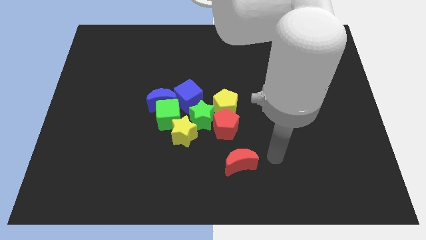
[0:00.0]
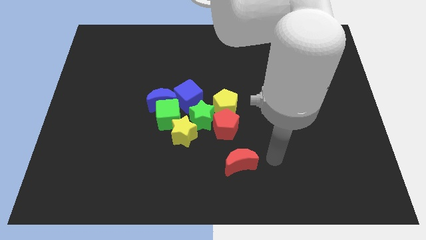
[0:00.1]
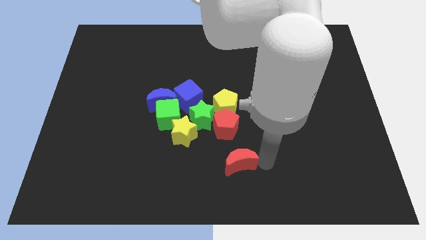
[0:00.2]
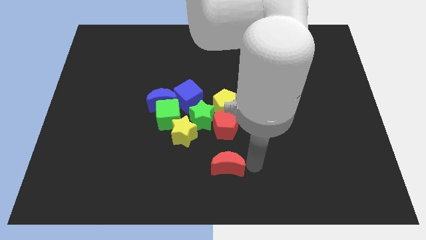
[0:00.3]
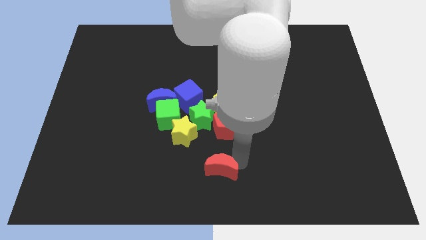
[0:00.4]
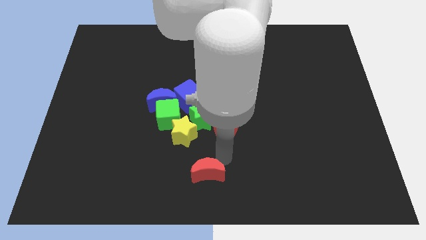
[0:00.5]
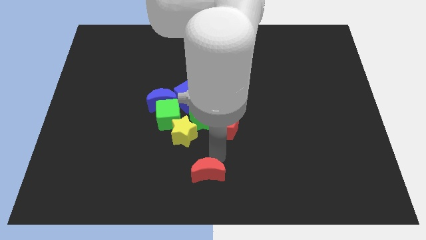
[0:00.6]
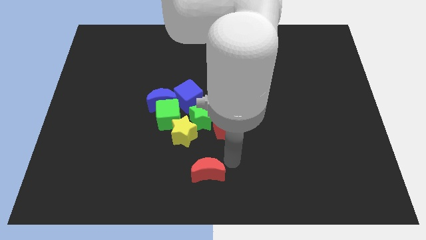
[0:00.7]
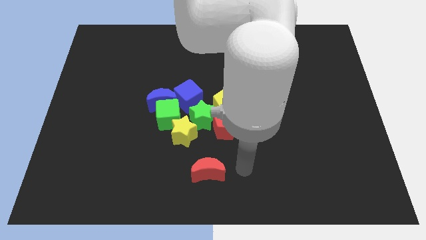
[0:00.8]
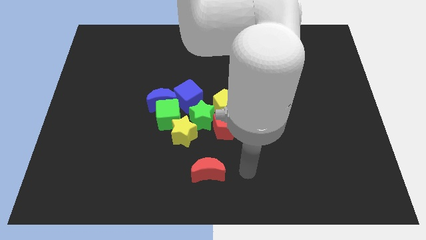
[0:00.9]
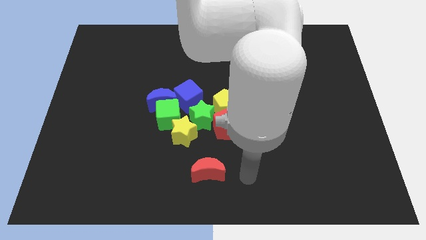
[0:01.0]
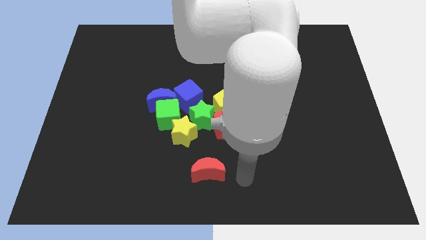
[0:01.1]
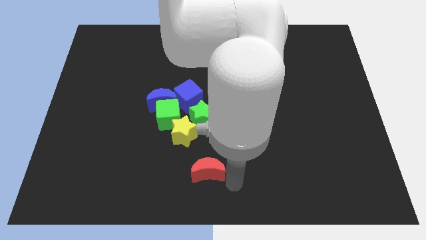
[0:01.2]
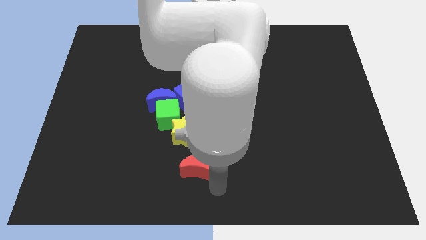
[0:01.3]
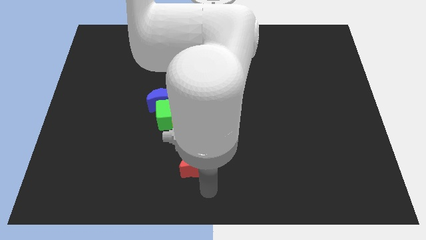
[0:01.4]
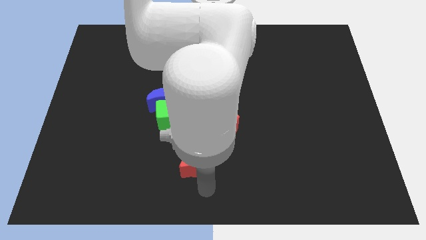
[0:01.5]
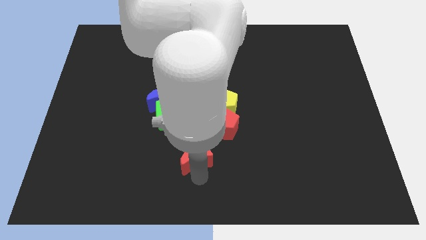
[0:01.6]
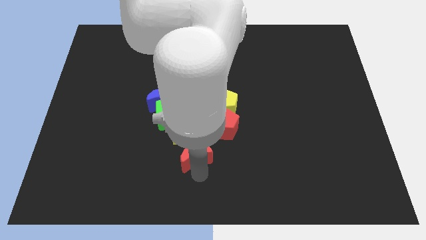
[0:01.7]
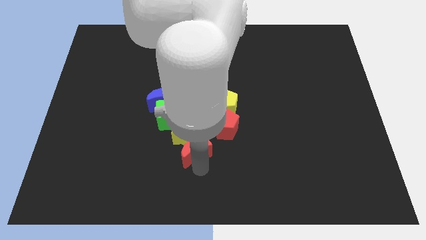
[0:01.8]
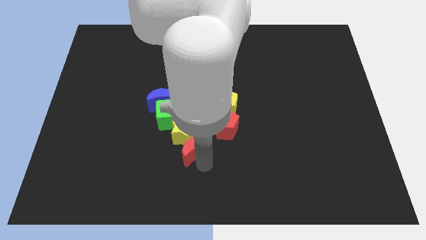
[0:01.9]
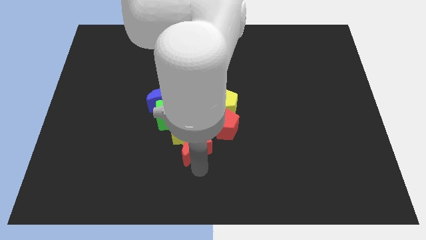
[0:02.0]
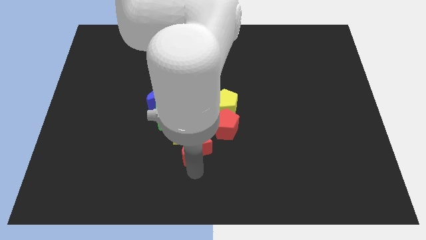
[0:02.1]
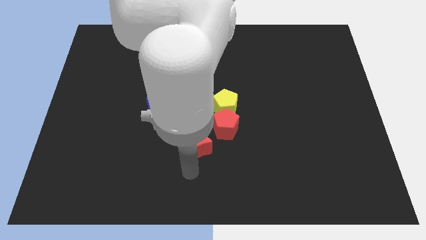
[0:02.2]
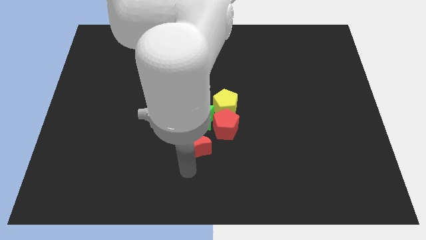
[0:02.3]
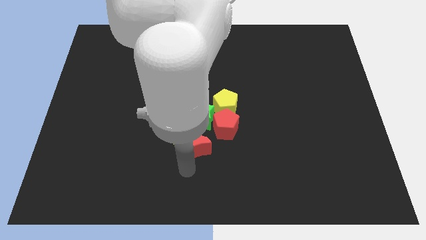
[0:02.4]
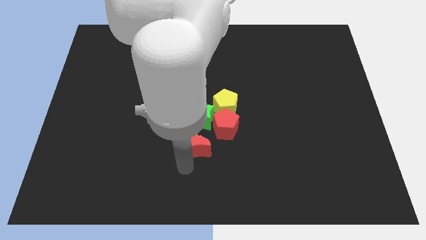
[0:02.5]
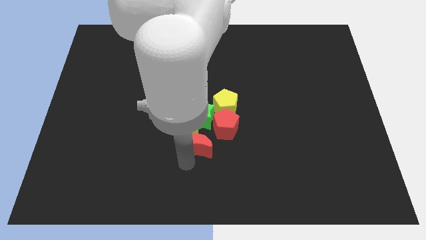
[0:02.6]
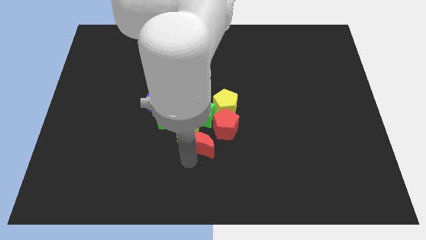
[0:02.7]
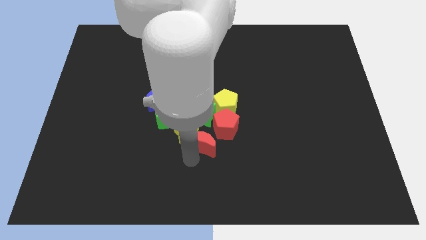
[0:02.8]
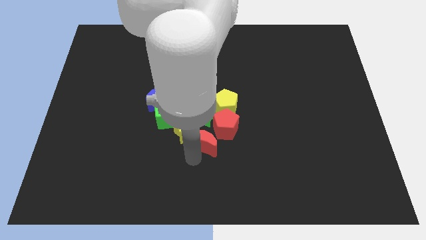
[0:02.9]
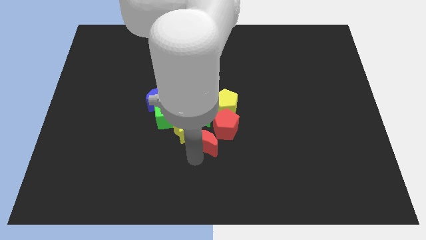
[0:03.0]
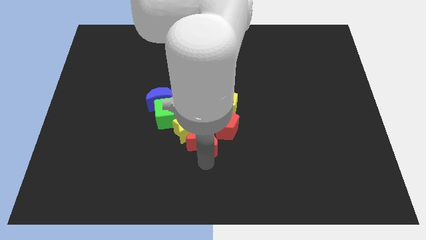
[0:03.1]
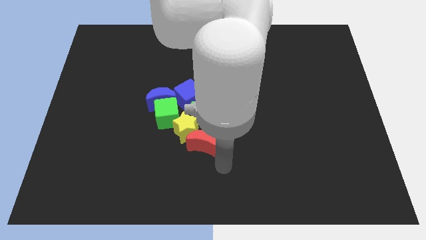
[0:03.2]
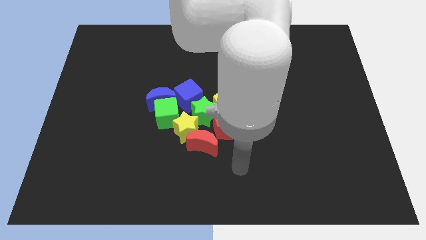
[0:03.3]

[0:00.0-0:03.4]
push the red moon towards the group of blocks

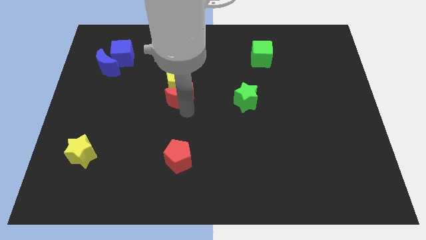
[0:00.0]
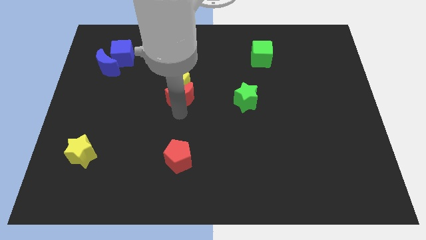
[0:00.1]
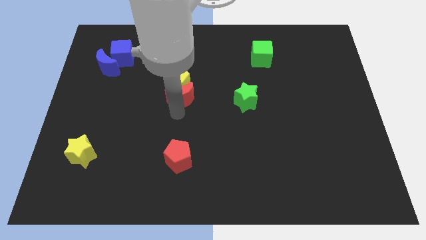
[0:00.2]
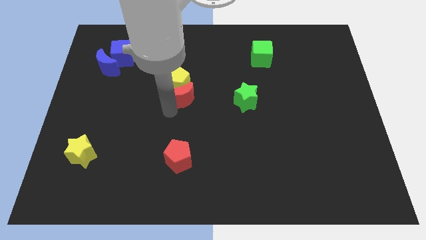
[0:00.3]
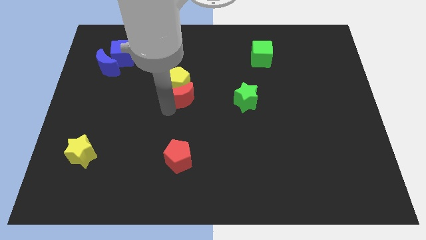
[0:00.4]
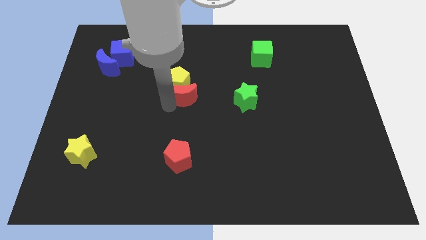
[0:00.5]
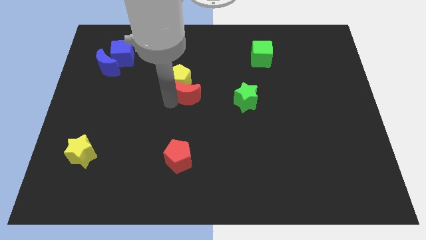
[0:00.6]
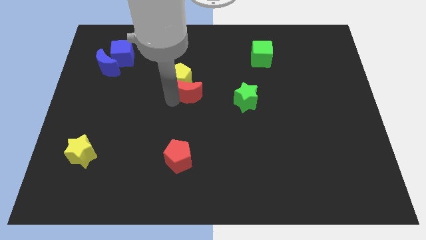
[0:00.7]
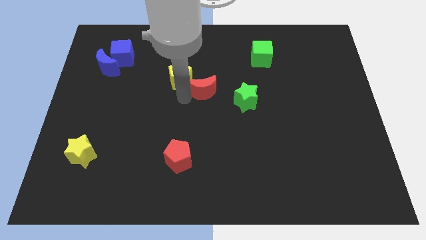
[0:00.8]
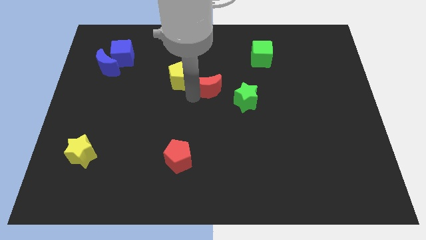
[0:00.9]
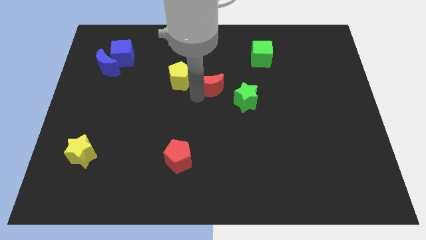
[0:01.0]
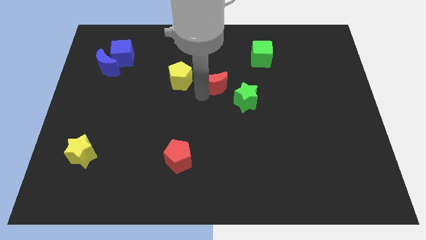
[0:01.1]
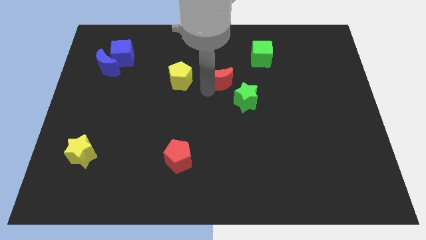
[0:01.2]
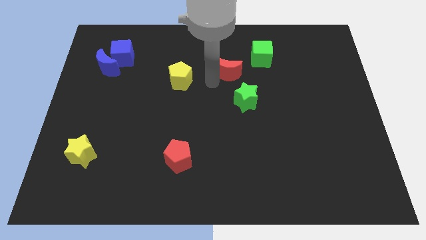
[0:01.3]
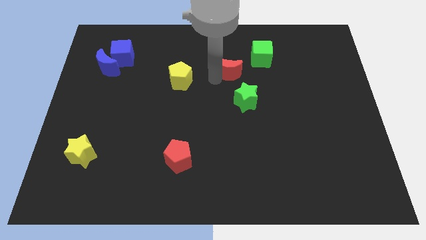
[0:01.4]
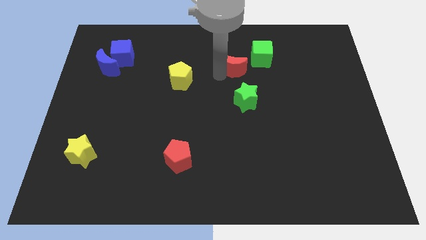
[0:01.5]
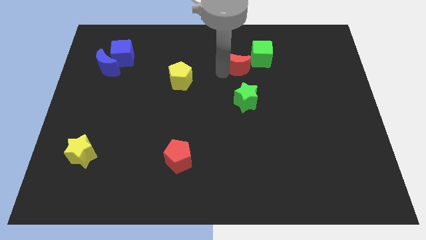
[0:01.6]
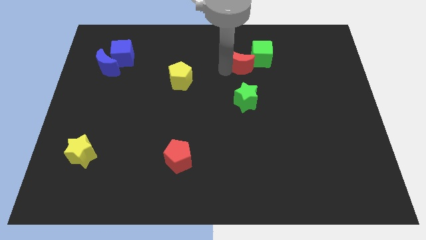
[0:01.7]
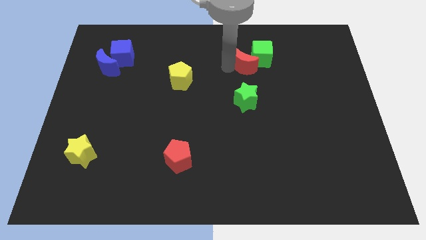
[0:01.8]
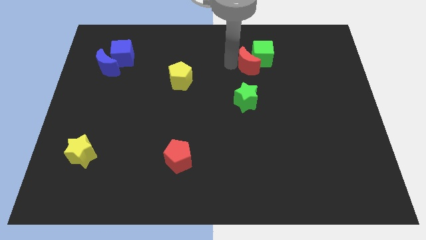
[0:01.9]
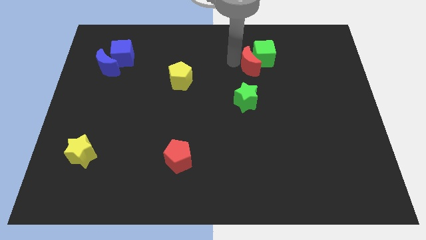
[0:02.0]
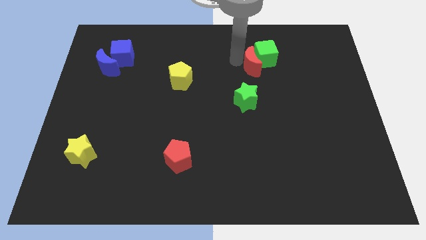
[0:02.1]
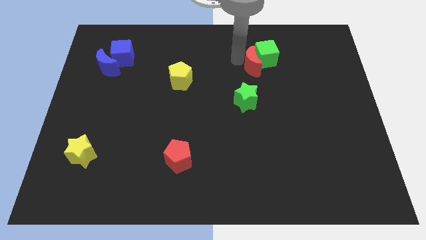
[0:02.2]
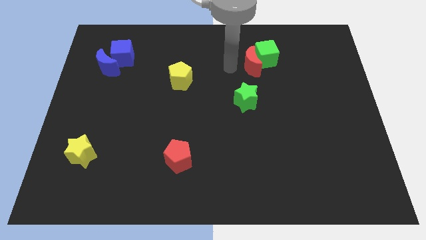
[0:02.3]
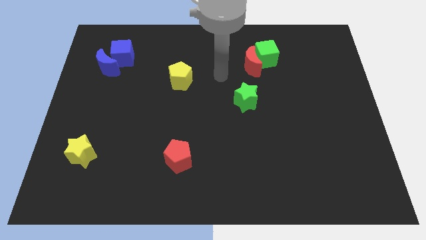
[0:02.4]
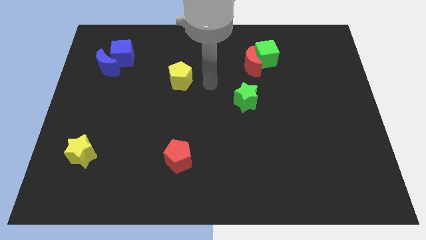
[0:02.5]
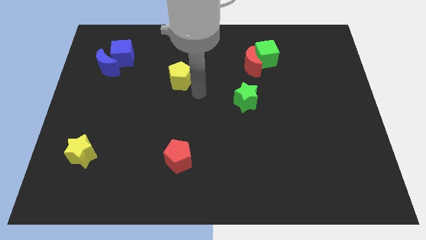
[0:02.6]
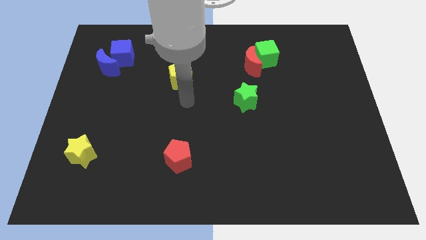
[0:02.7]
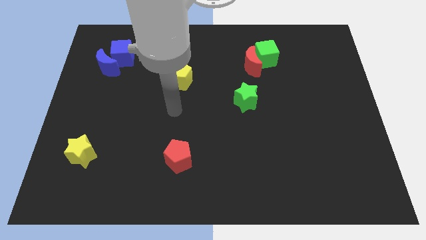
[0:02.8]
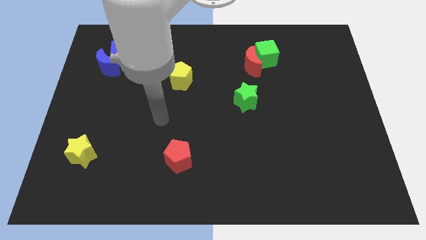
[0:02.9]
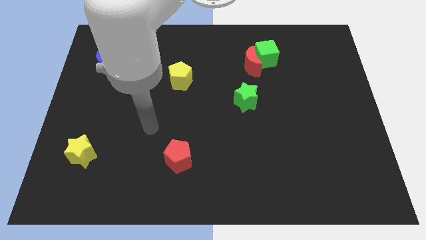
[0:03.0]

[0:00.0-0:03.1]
move red moon close to the green cube

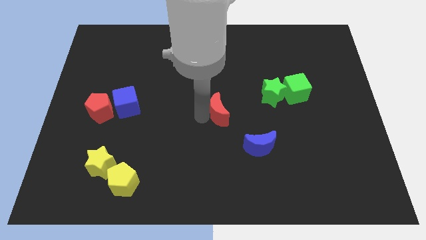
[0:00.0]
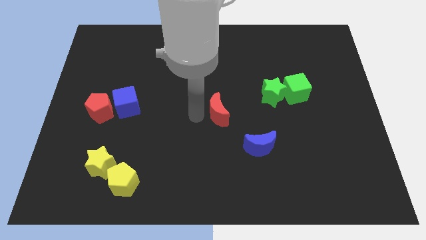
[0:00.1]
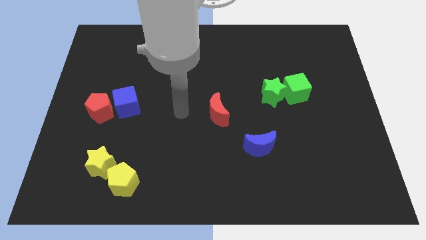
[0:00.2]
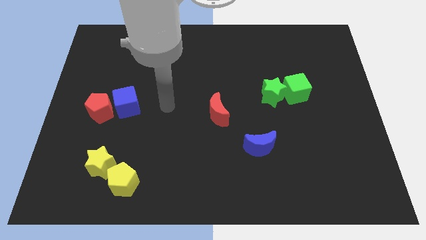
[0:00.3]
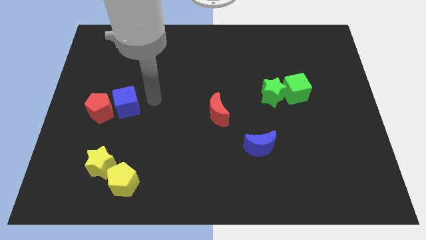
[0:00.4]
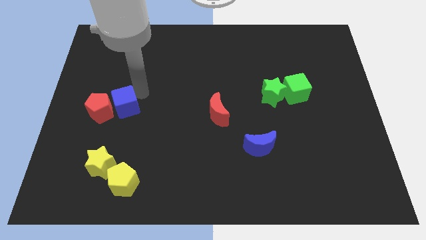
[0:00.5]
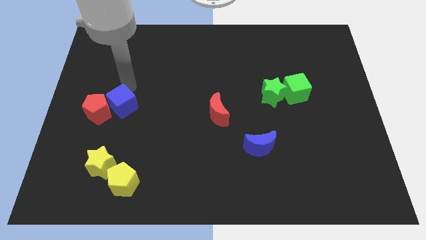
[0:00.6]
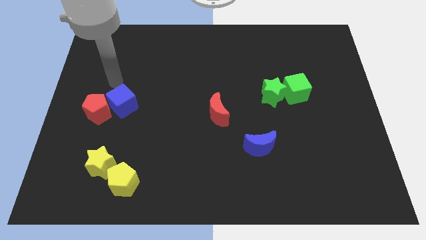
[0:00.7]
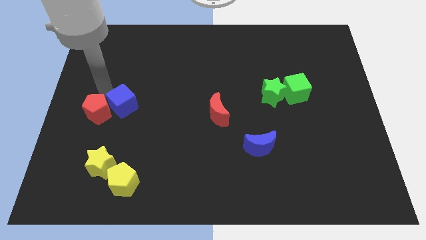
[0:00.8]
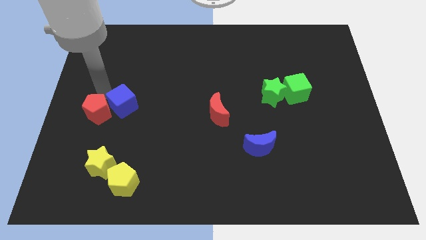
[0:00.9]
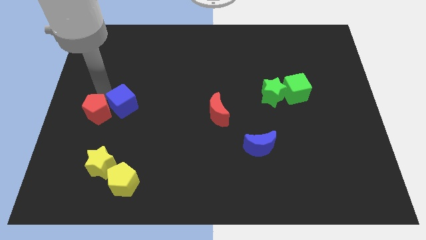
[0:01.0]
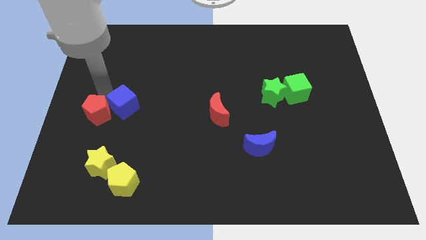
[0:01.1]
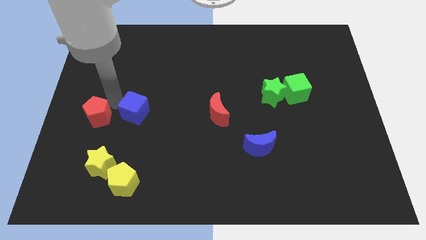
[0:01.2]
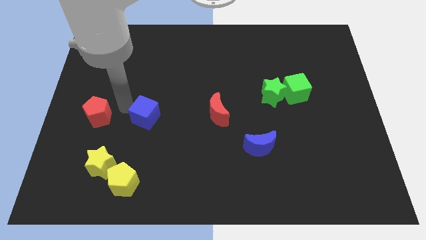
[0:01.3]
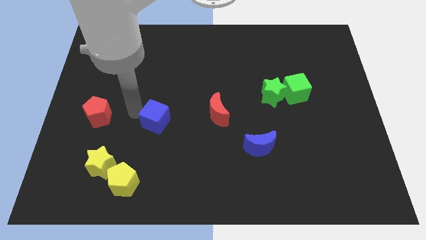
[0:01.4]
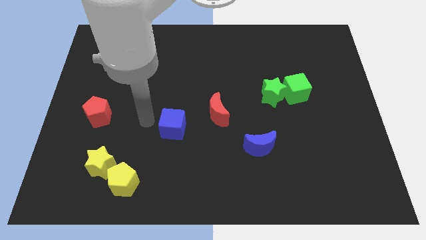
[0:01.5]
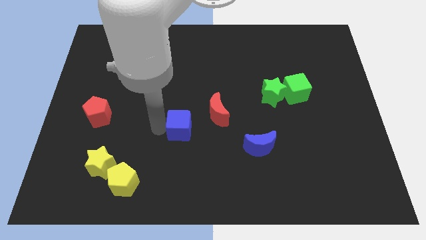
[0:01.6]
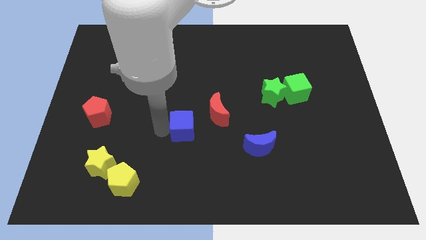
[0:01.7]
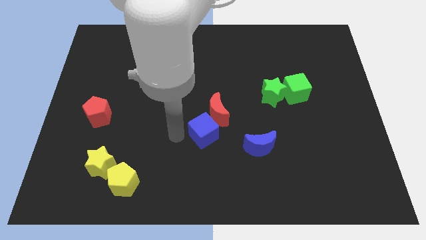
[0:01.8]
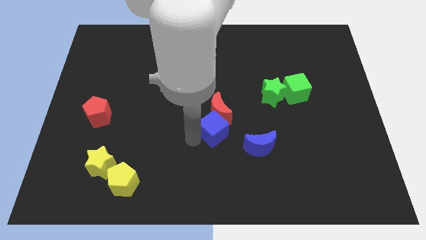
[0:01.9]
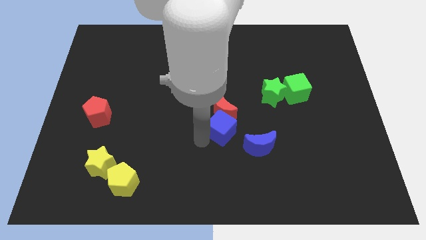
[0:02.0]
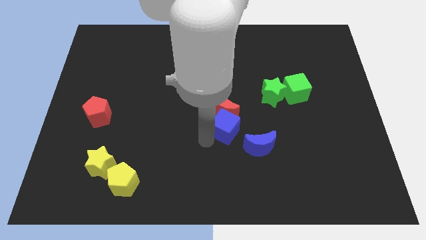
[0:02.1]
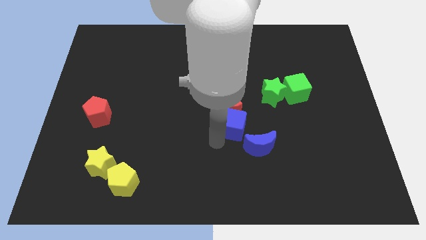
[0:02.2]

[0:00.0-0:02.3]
push the blue cube into the bottom of the red crescent

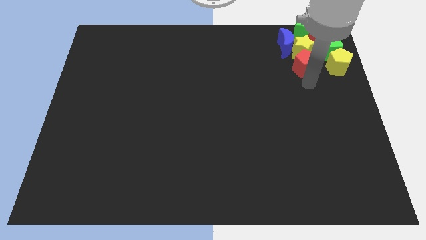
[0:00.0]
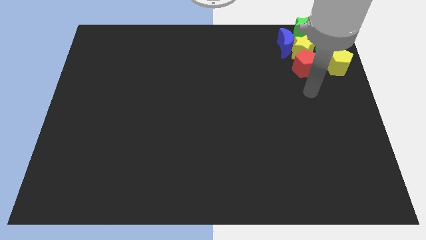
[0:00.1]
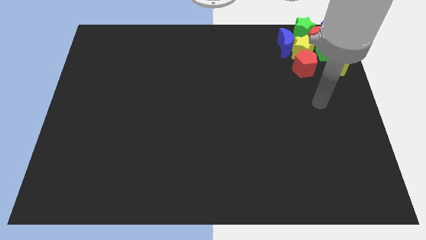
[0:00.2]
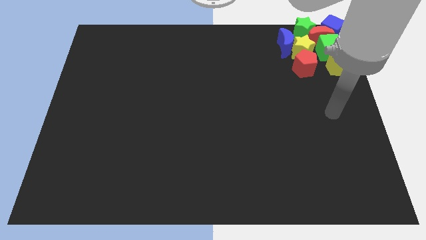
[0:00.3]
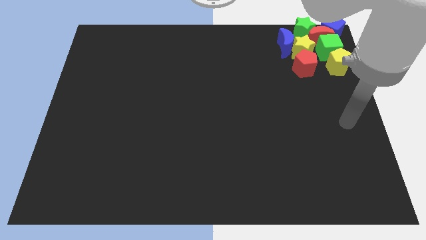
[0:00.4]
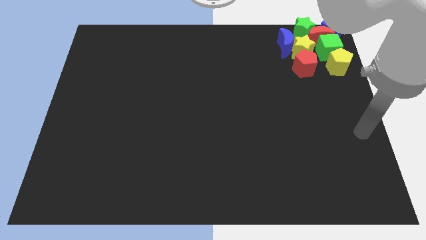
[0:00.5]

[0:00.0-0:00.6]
move the arm away from the red pentagon
